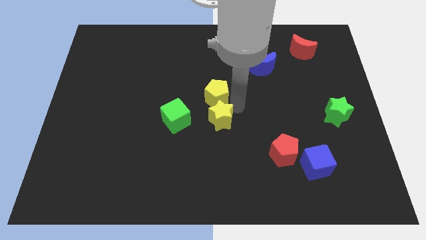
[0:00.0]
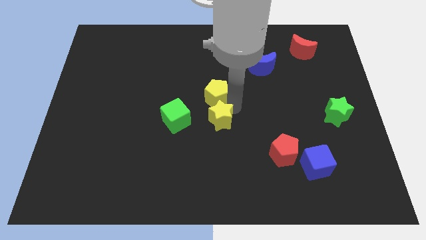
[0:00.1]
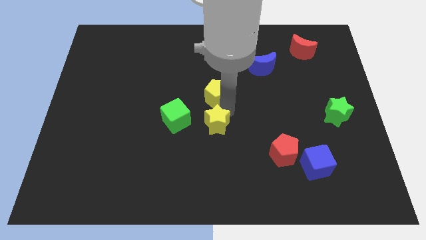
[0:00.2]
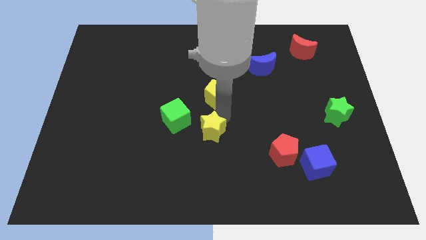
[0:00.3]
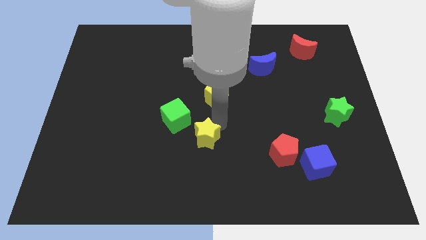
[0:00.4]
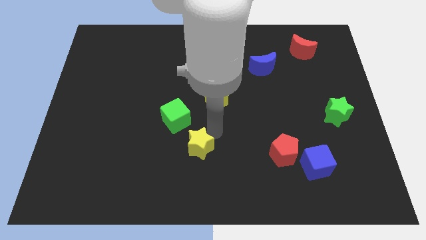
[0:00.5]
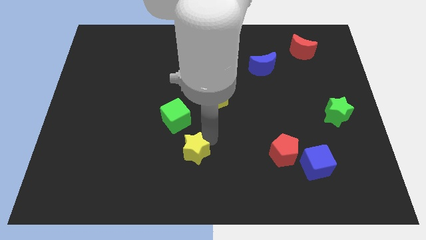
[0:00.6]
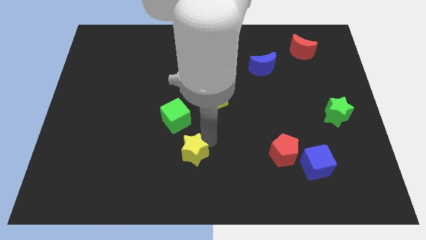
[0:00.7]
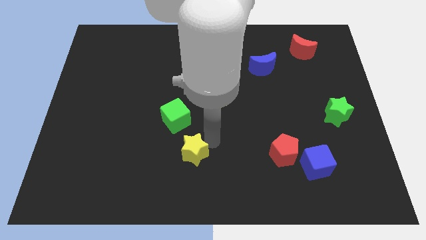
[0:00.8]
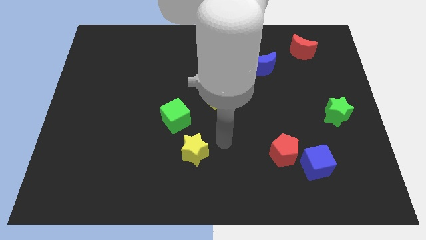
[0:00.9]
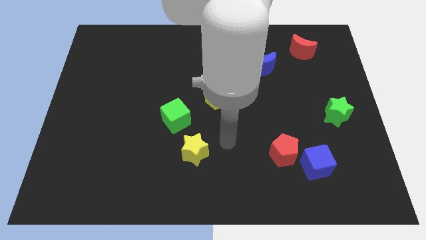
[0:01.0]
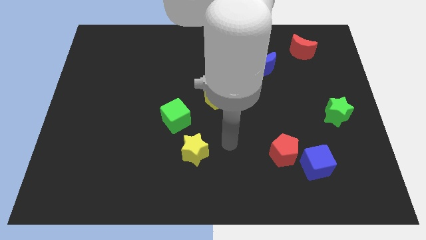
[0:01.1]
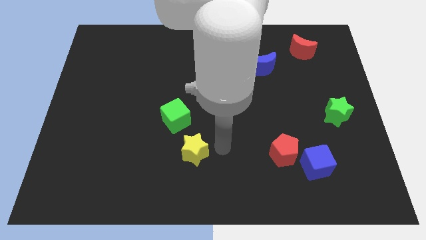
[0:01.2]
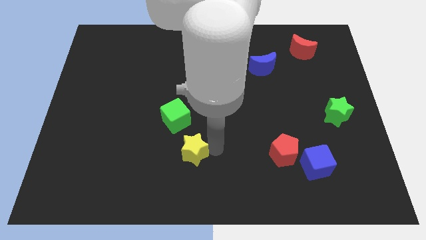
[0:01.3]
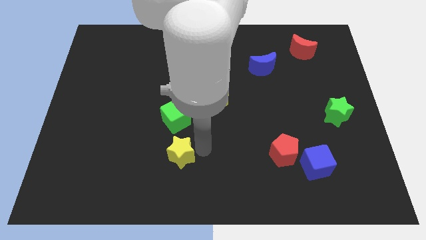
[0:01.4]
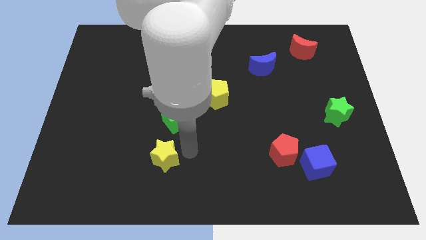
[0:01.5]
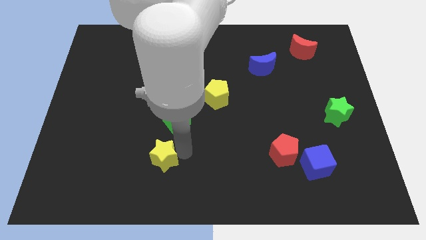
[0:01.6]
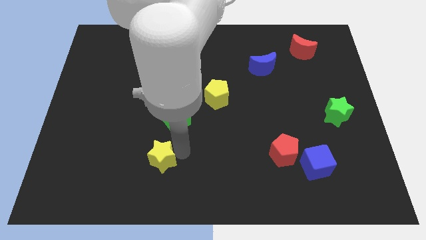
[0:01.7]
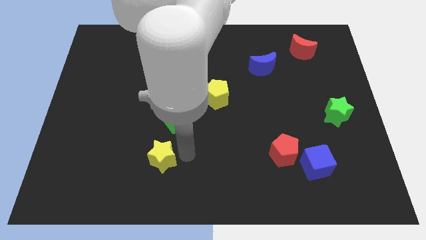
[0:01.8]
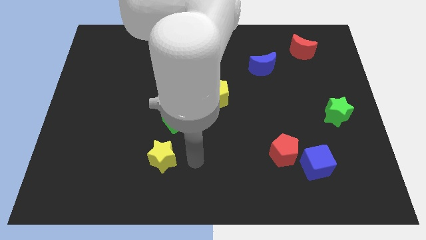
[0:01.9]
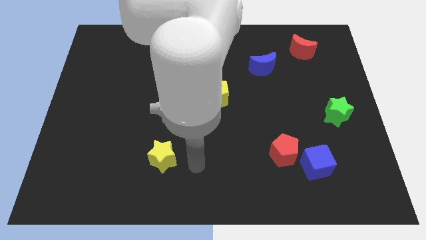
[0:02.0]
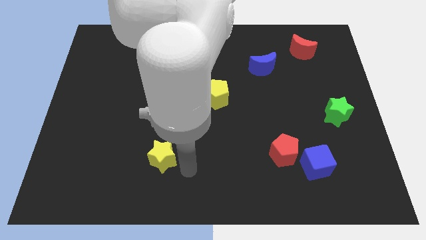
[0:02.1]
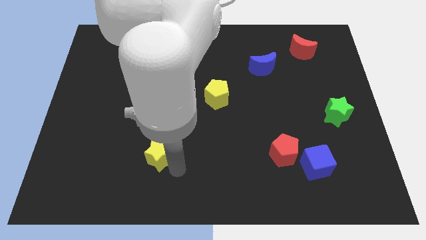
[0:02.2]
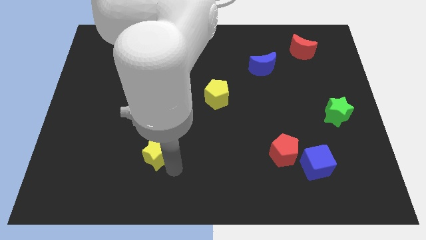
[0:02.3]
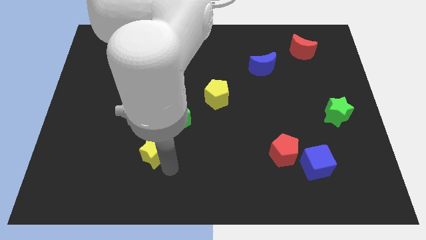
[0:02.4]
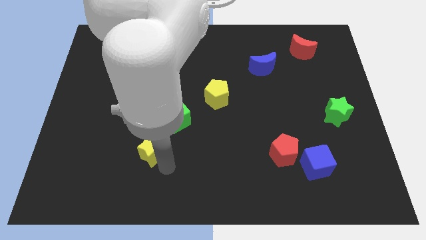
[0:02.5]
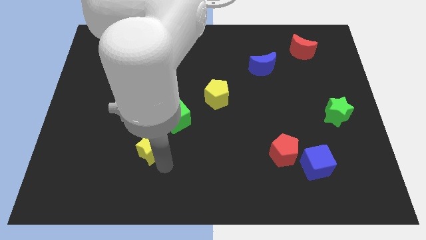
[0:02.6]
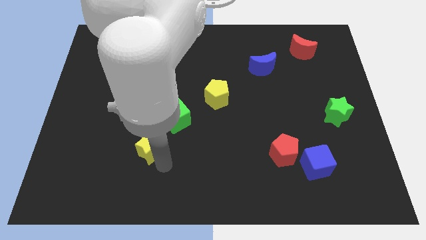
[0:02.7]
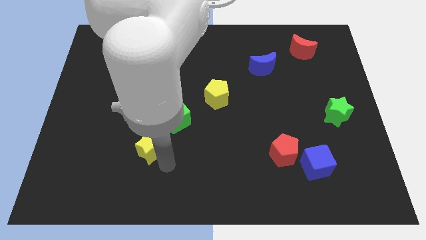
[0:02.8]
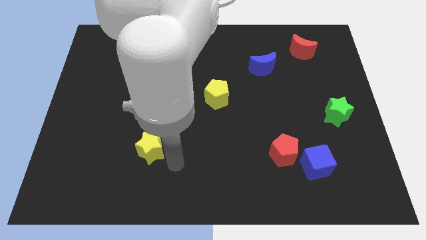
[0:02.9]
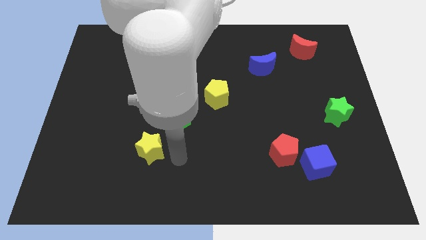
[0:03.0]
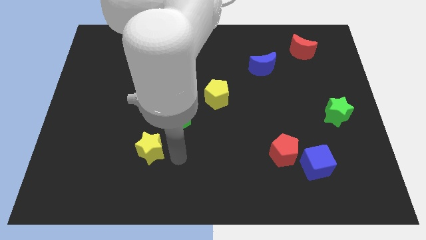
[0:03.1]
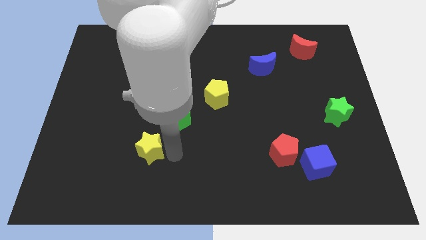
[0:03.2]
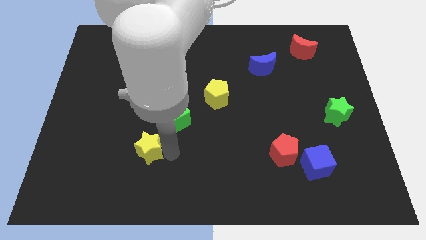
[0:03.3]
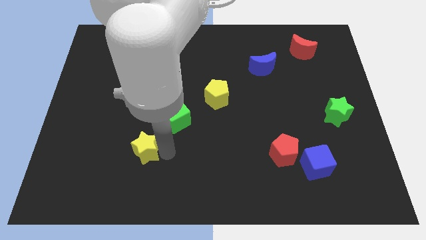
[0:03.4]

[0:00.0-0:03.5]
place yellow star to the bottom left of green cube

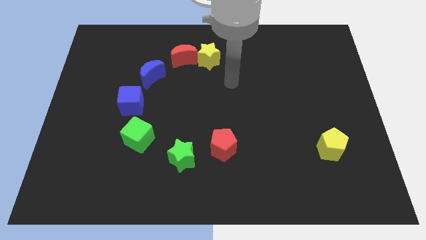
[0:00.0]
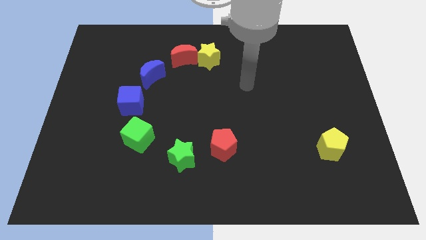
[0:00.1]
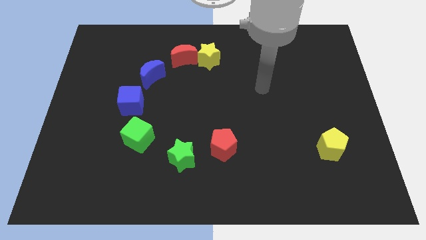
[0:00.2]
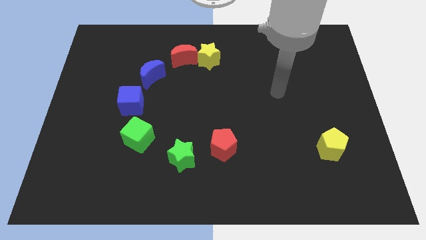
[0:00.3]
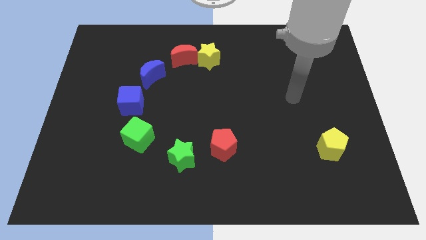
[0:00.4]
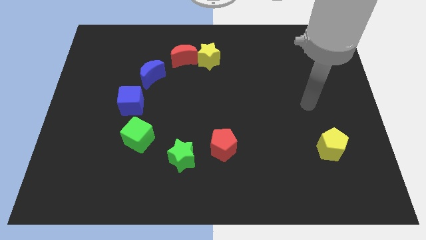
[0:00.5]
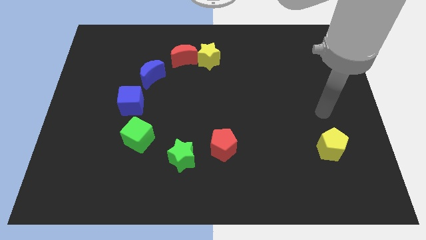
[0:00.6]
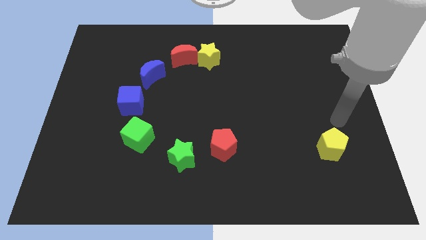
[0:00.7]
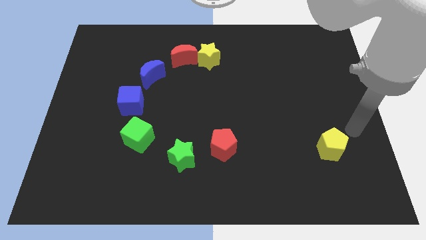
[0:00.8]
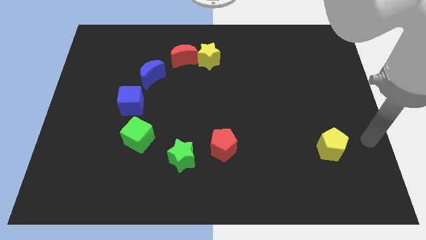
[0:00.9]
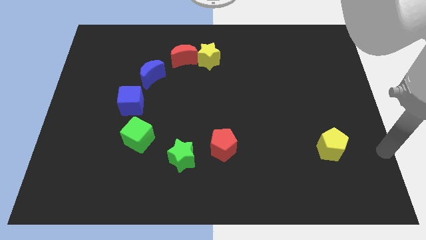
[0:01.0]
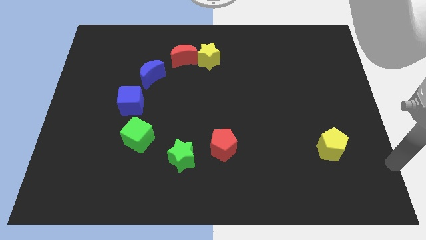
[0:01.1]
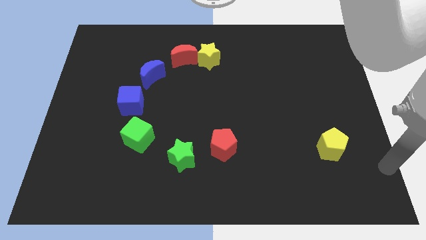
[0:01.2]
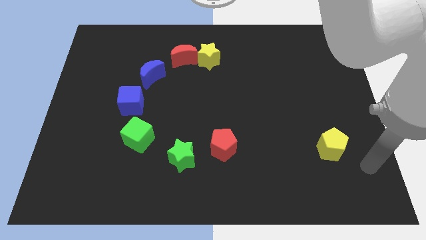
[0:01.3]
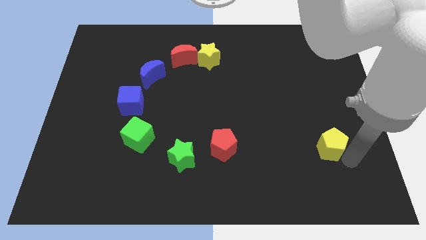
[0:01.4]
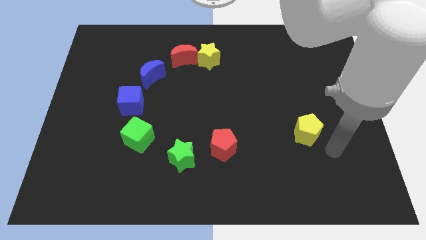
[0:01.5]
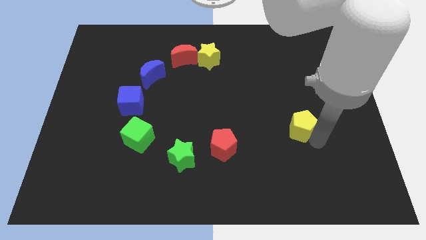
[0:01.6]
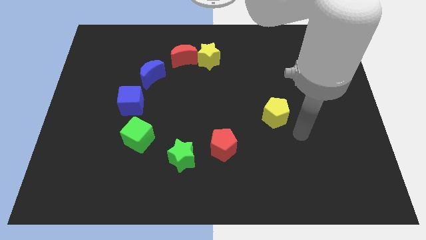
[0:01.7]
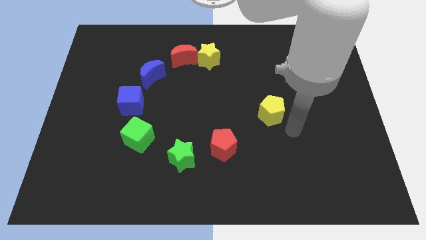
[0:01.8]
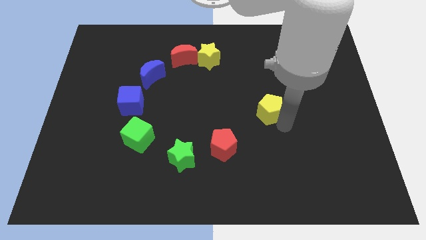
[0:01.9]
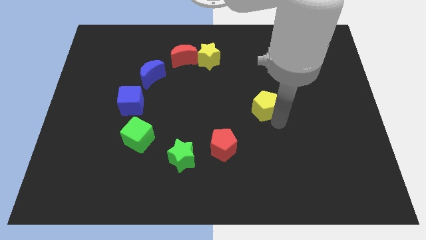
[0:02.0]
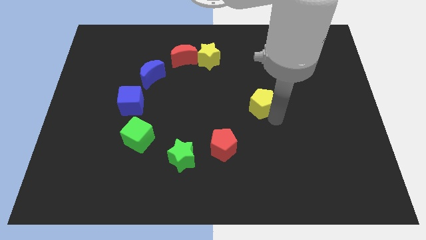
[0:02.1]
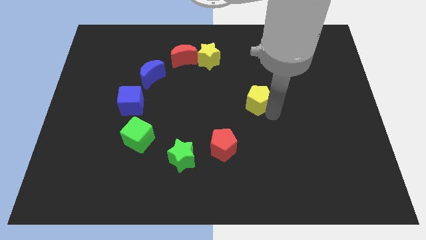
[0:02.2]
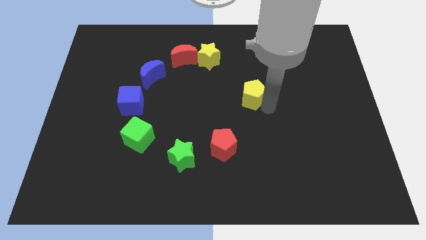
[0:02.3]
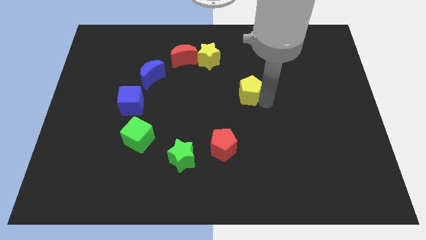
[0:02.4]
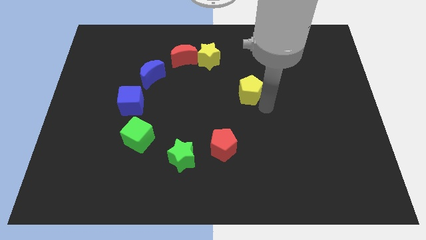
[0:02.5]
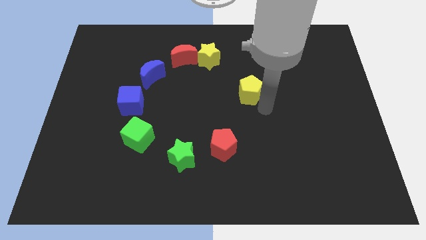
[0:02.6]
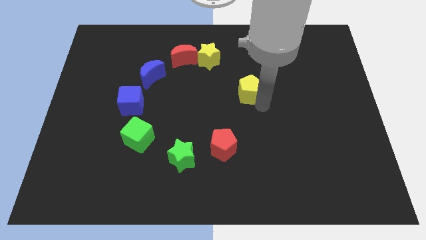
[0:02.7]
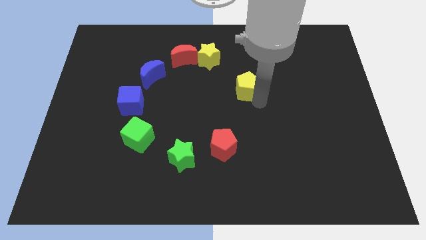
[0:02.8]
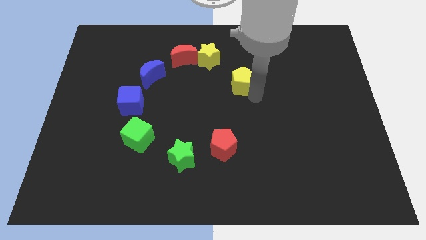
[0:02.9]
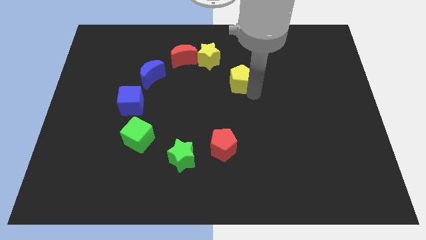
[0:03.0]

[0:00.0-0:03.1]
move yellow pentagon towards yellow star

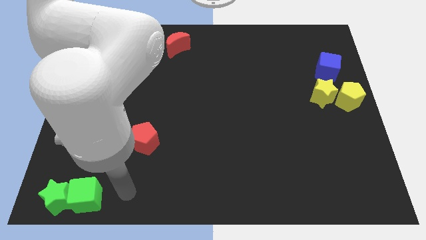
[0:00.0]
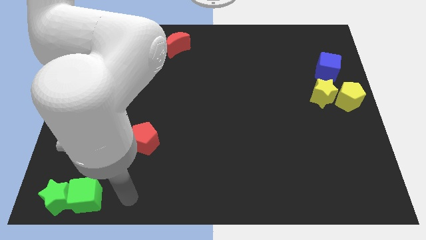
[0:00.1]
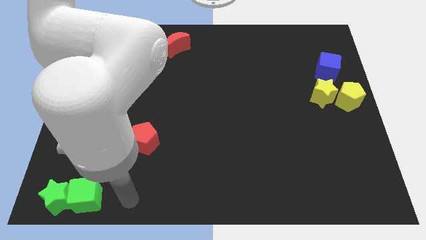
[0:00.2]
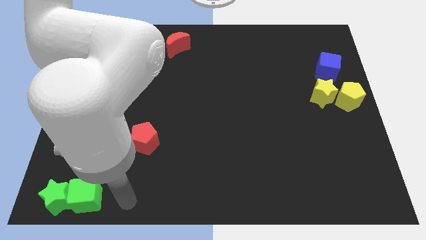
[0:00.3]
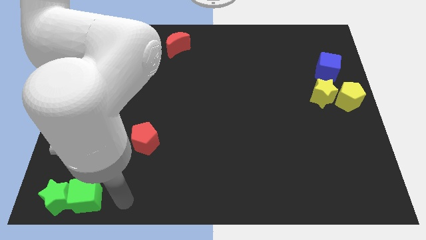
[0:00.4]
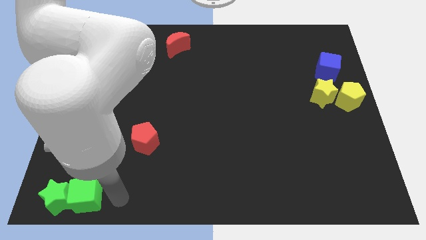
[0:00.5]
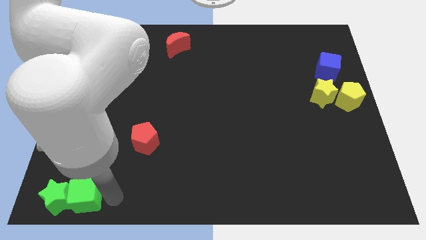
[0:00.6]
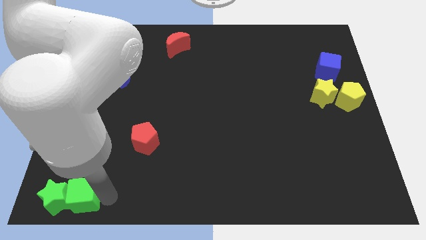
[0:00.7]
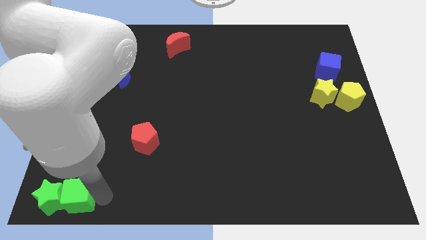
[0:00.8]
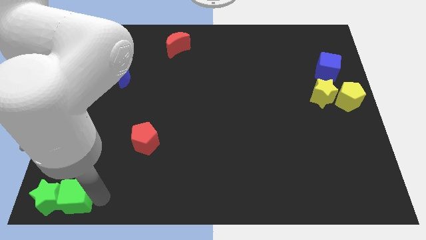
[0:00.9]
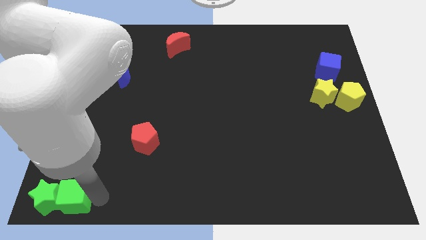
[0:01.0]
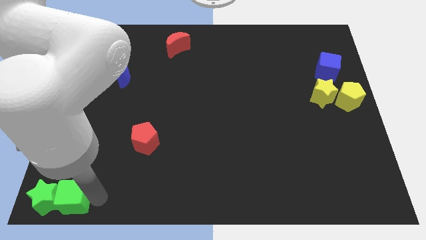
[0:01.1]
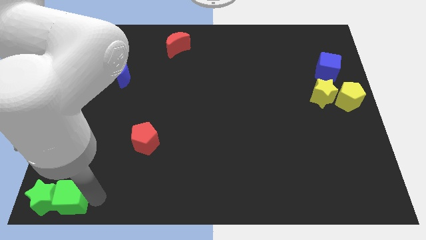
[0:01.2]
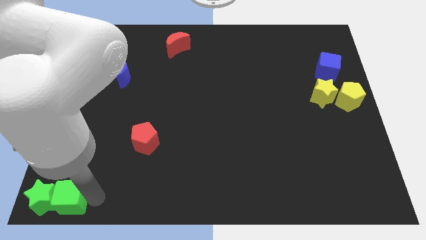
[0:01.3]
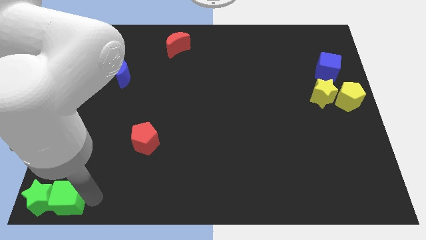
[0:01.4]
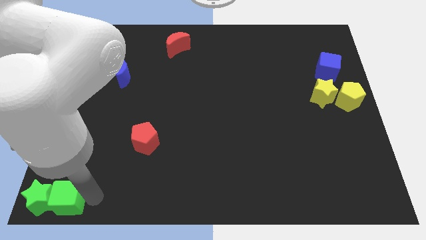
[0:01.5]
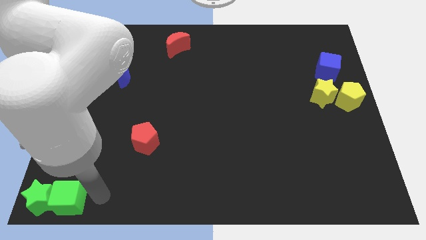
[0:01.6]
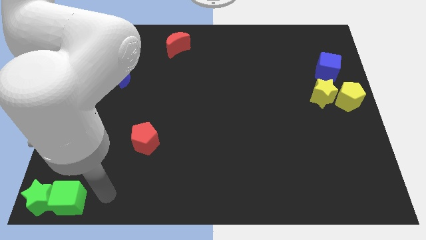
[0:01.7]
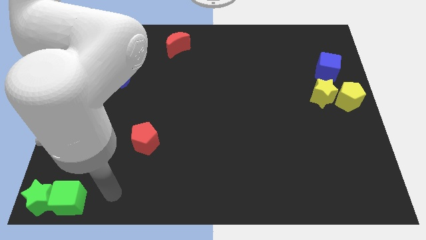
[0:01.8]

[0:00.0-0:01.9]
move the green star with green cube to the bottom left

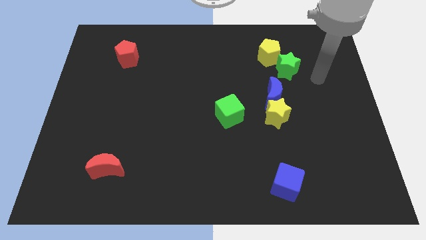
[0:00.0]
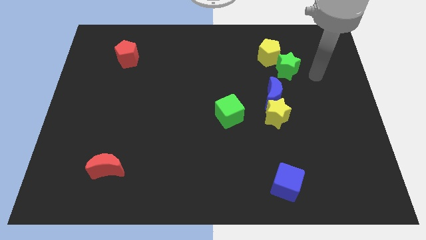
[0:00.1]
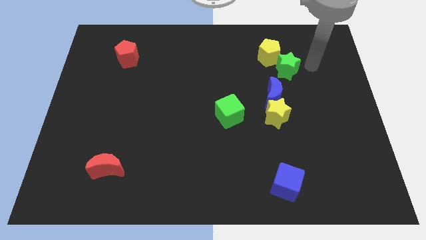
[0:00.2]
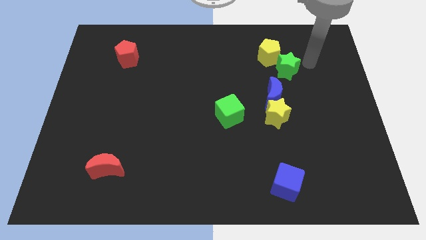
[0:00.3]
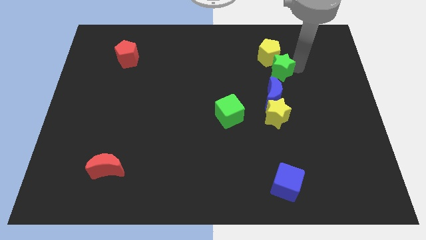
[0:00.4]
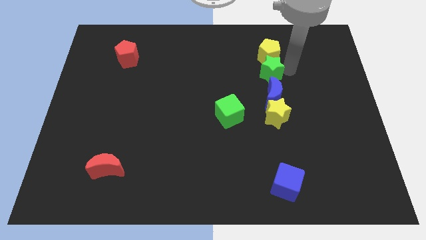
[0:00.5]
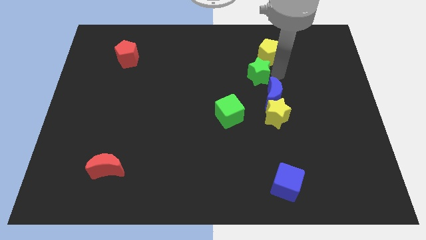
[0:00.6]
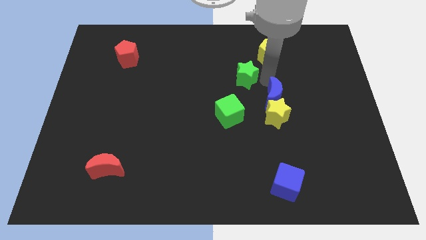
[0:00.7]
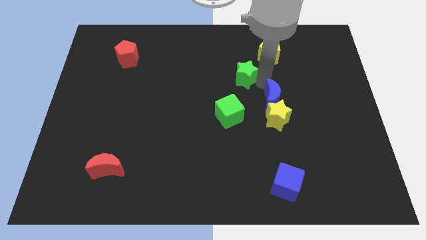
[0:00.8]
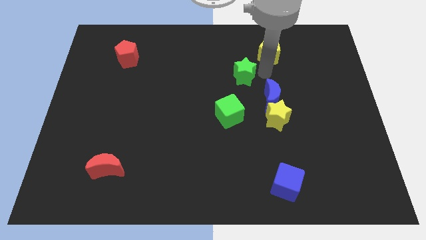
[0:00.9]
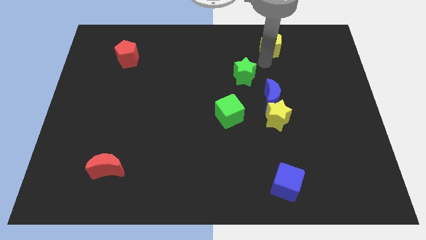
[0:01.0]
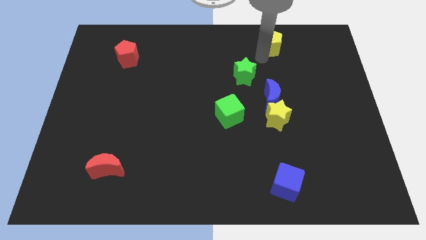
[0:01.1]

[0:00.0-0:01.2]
separate green star and yellow pentagon from each other
